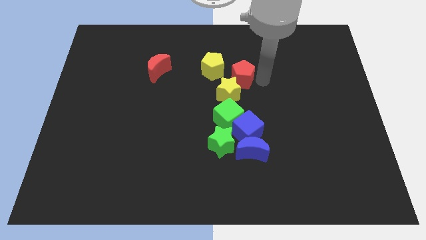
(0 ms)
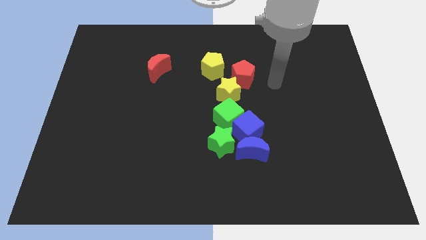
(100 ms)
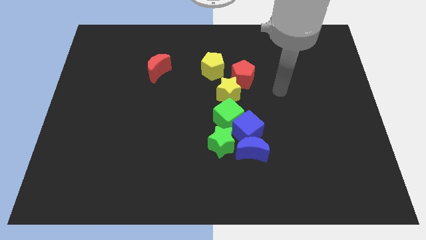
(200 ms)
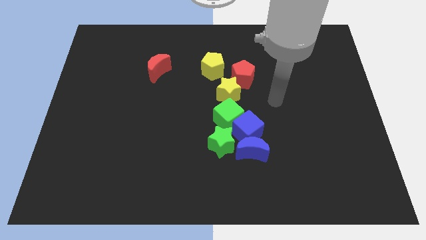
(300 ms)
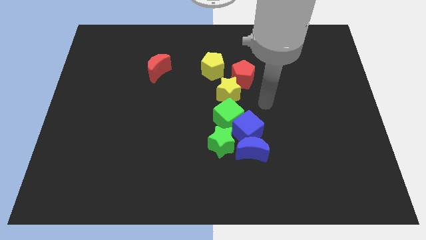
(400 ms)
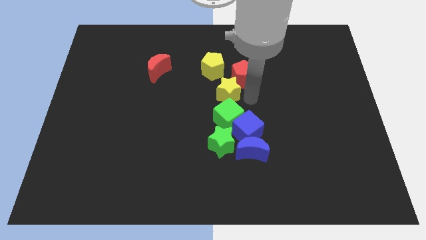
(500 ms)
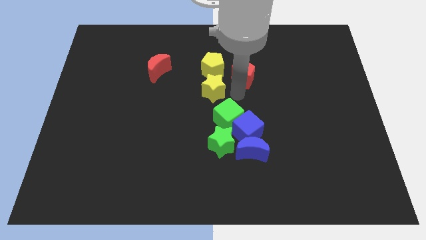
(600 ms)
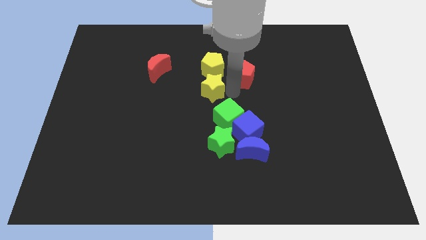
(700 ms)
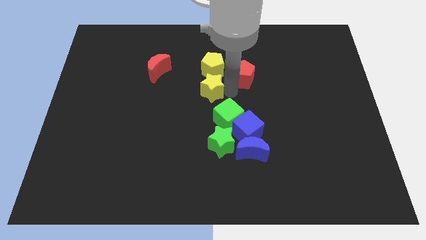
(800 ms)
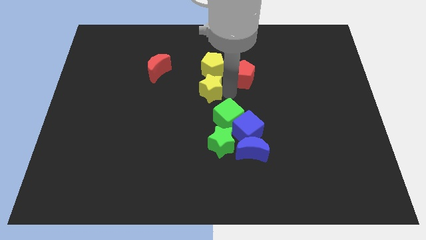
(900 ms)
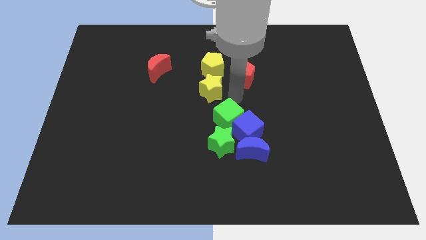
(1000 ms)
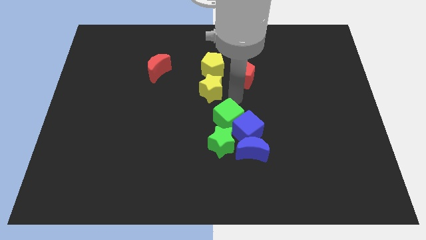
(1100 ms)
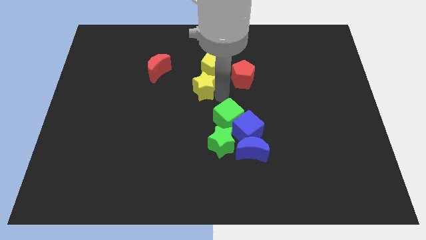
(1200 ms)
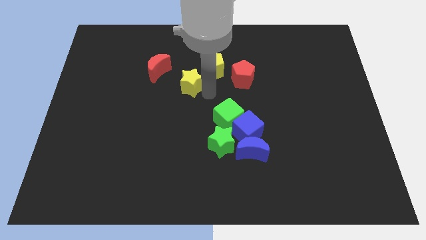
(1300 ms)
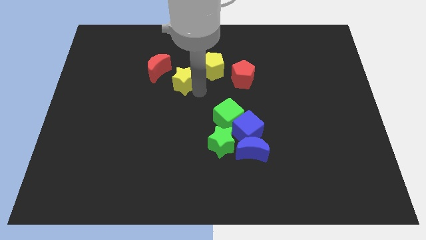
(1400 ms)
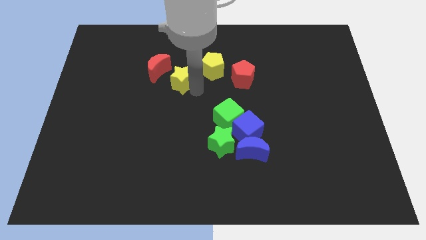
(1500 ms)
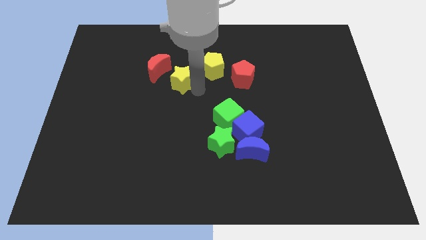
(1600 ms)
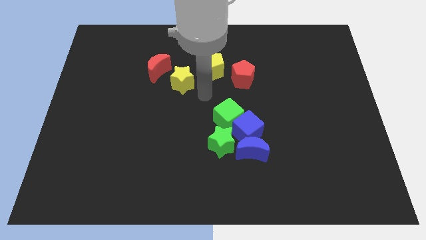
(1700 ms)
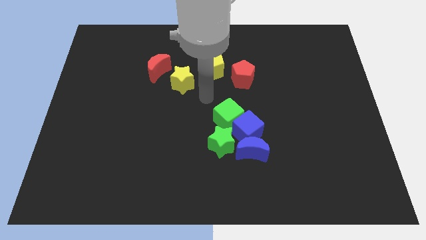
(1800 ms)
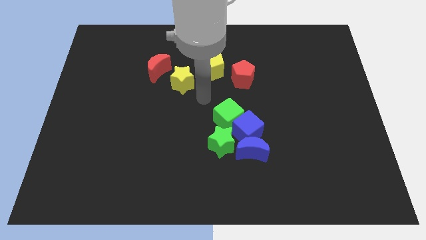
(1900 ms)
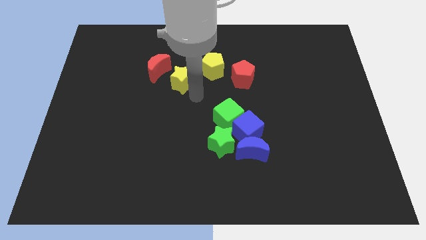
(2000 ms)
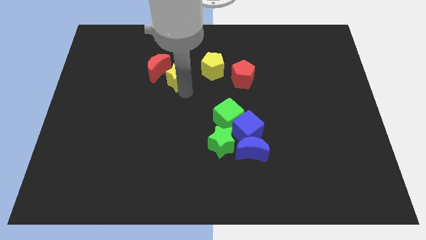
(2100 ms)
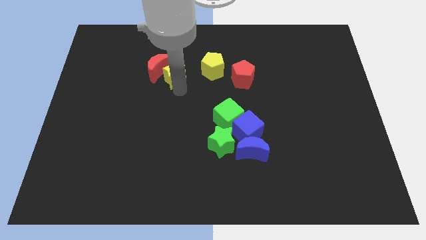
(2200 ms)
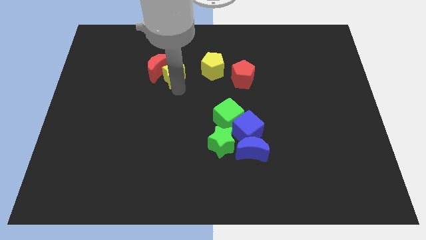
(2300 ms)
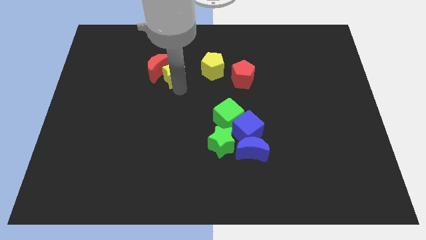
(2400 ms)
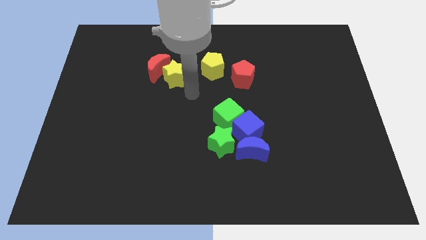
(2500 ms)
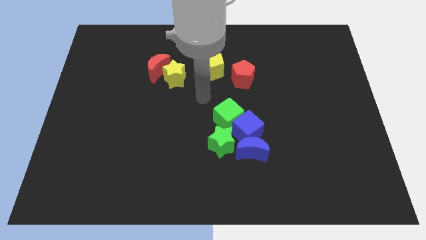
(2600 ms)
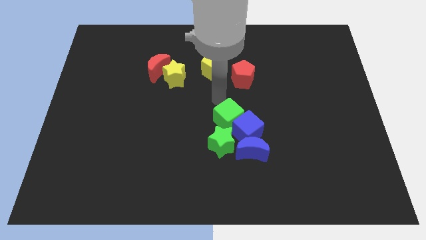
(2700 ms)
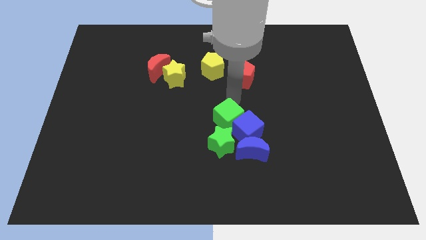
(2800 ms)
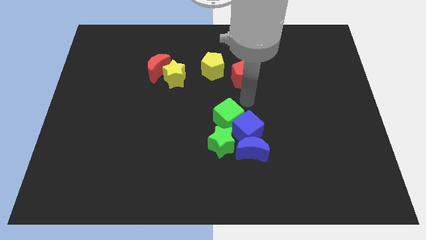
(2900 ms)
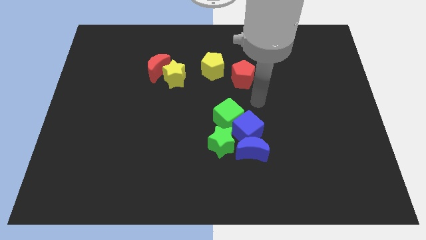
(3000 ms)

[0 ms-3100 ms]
place the yellow star to the right side of the red crescent

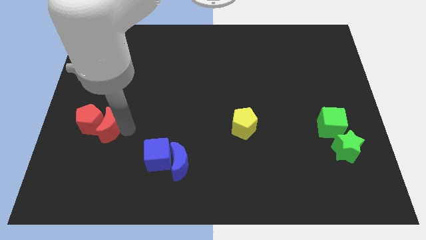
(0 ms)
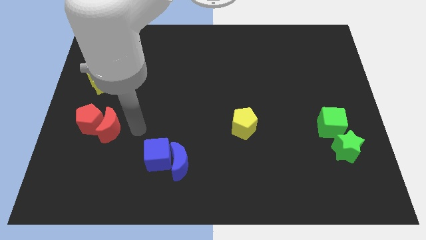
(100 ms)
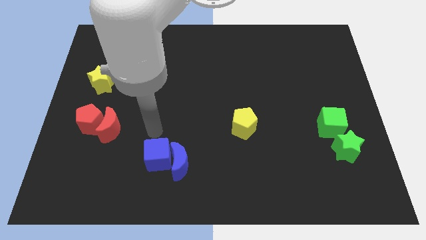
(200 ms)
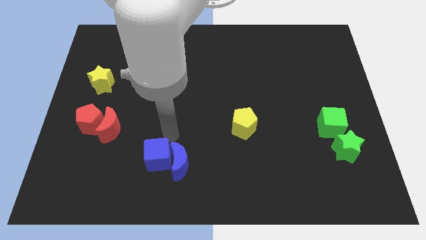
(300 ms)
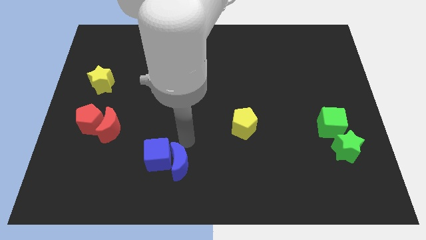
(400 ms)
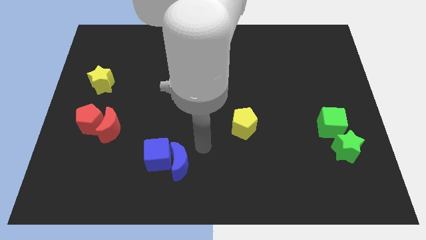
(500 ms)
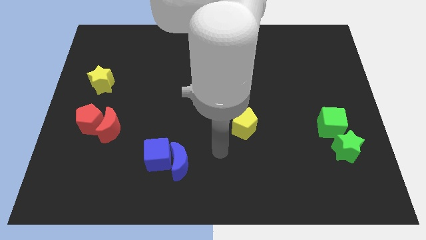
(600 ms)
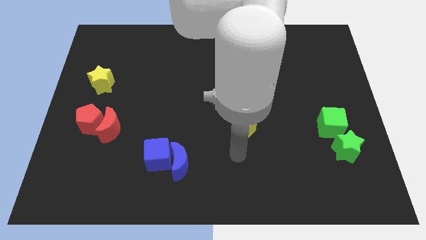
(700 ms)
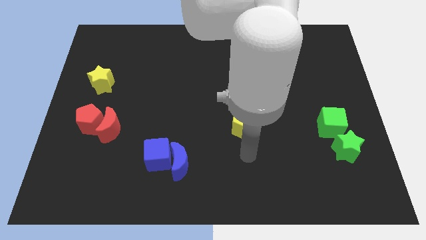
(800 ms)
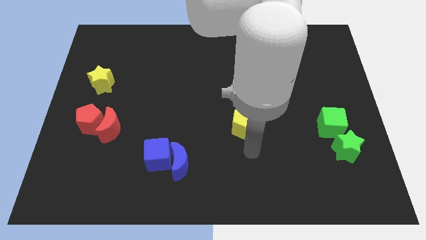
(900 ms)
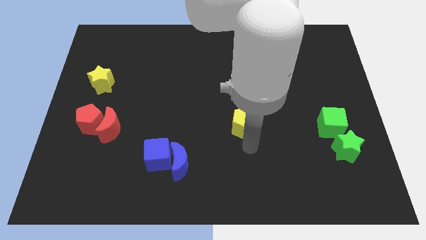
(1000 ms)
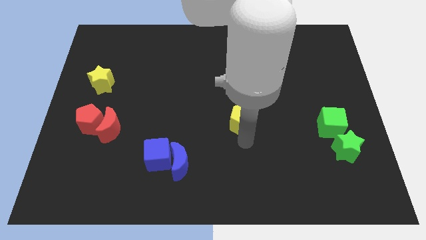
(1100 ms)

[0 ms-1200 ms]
move robot arm towards yellow pentagon

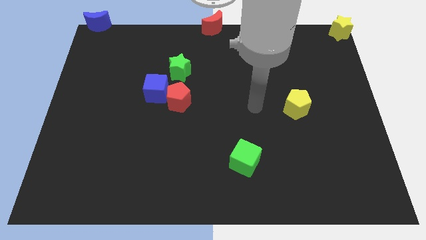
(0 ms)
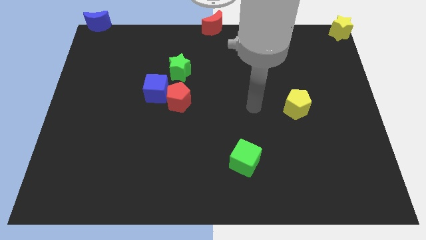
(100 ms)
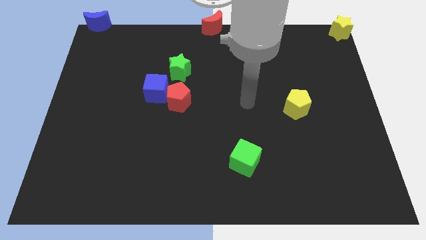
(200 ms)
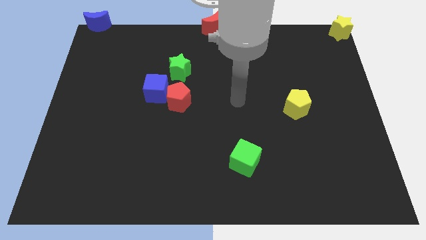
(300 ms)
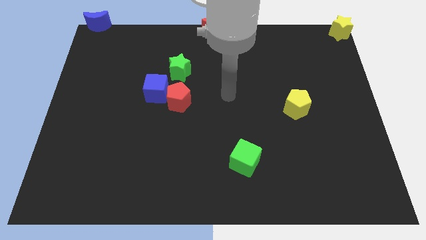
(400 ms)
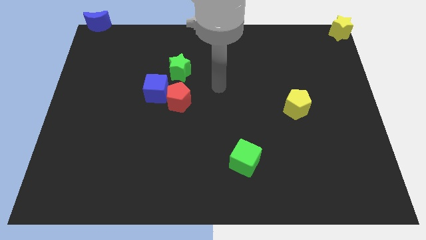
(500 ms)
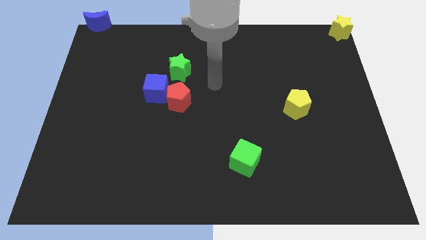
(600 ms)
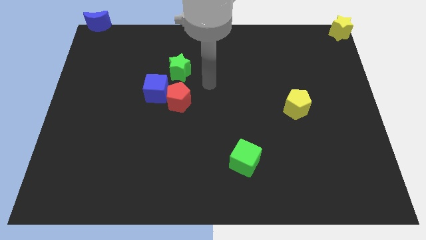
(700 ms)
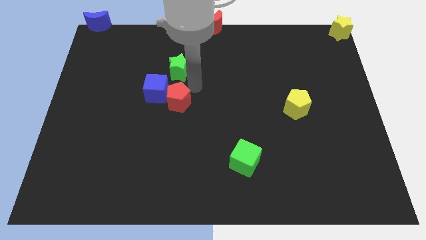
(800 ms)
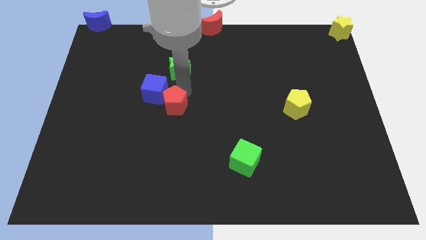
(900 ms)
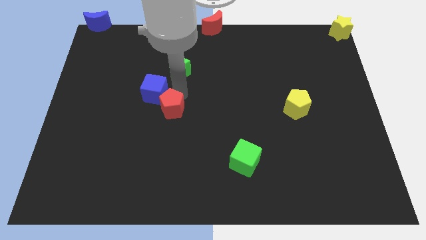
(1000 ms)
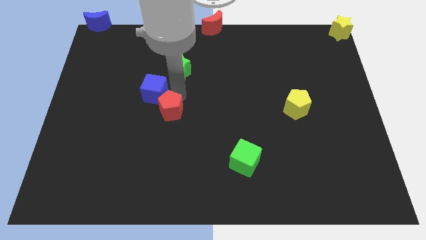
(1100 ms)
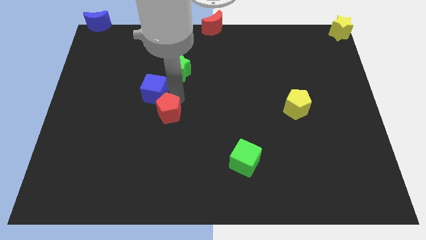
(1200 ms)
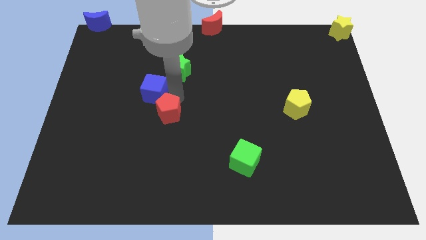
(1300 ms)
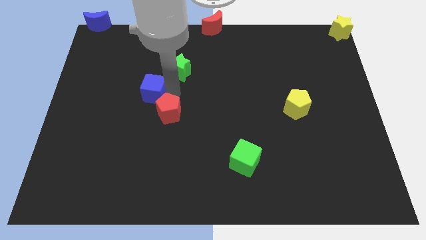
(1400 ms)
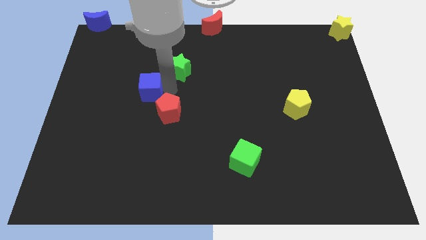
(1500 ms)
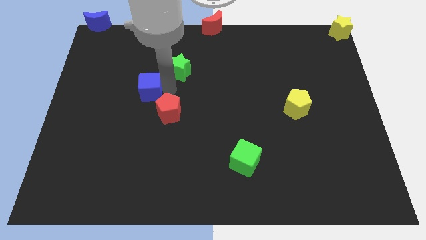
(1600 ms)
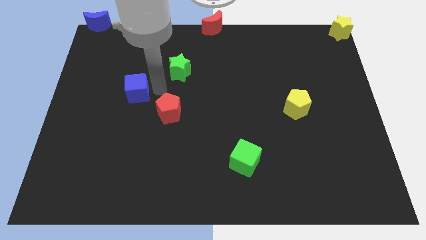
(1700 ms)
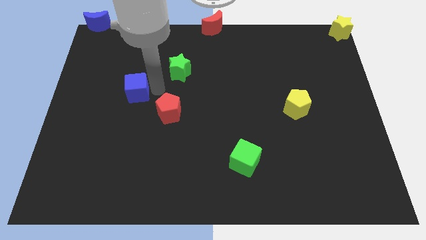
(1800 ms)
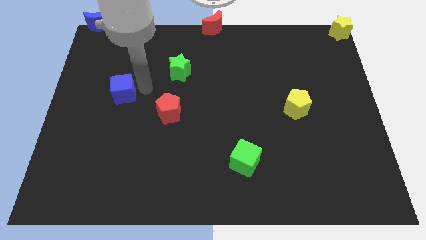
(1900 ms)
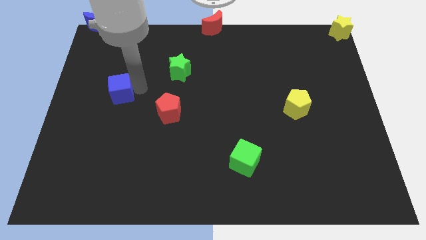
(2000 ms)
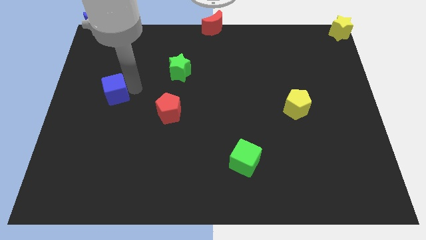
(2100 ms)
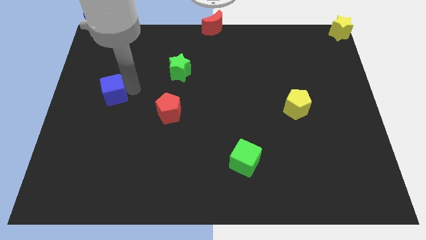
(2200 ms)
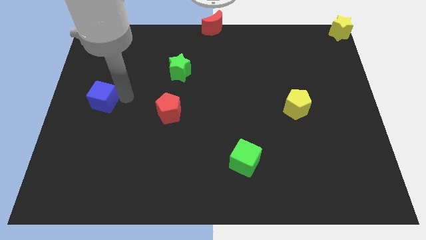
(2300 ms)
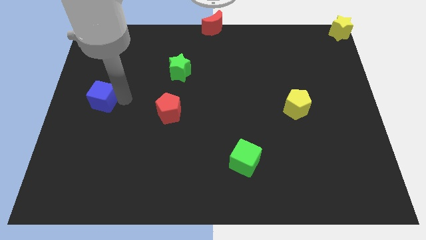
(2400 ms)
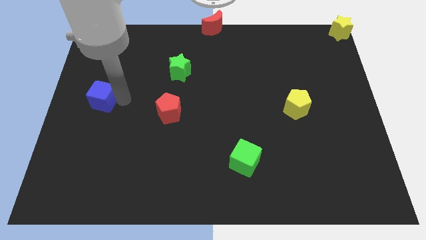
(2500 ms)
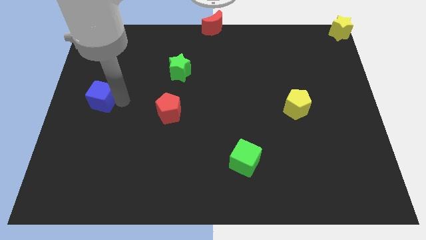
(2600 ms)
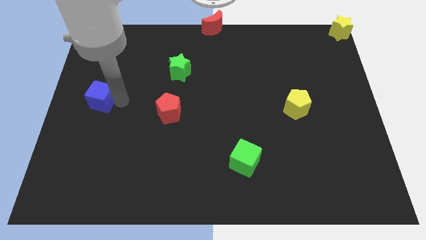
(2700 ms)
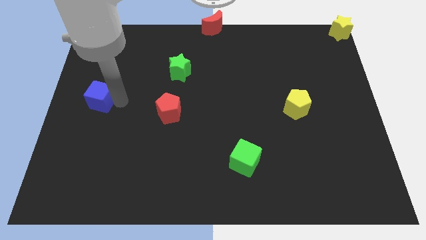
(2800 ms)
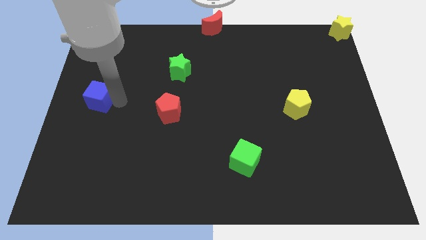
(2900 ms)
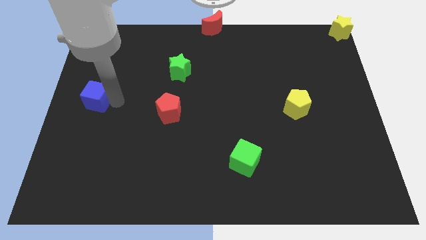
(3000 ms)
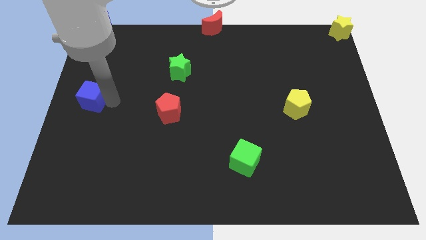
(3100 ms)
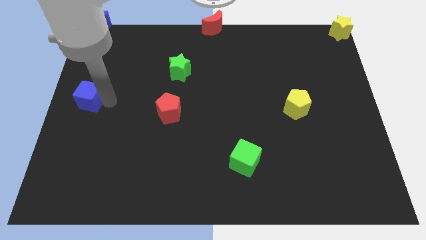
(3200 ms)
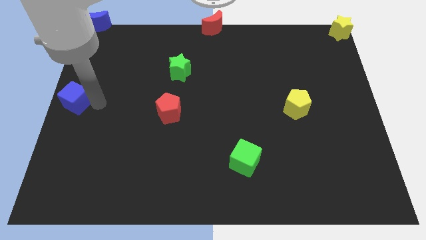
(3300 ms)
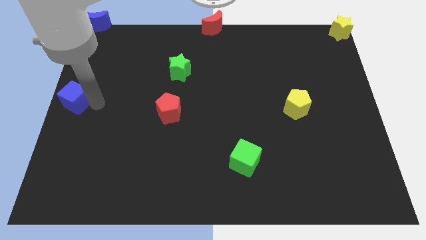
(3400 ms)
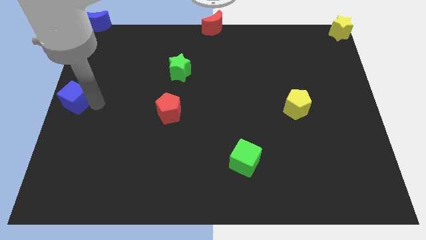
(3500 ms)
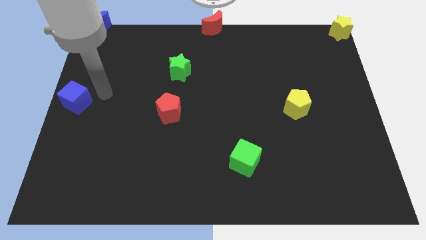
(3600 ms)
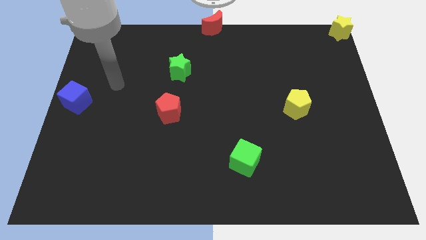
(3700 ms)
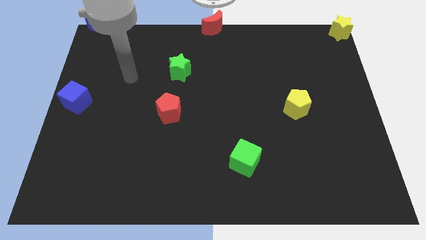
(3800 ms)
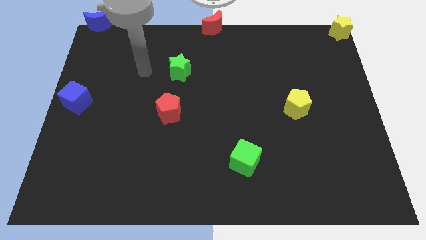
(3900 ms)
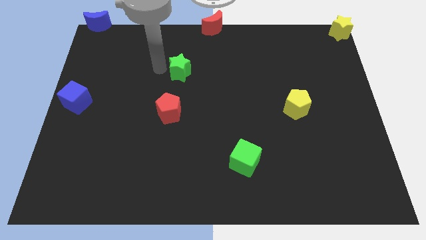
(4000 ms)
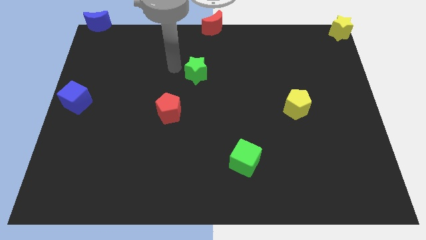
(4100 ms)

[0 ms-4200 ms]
move the blue cube to the left center of the board

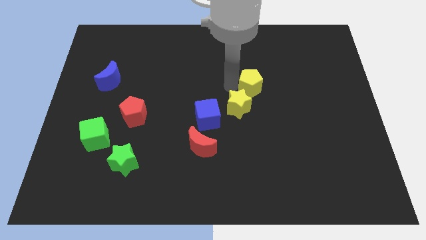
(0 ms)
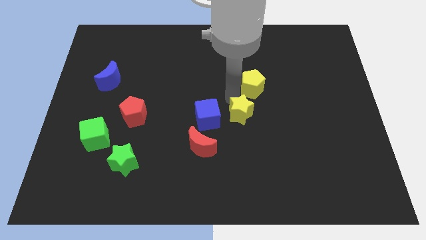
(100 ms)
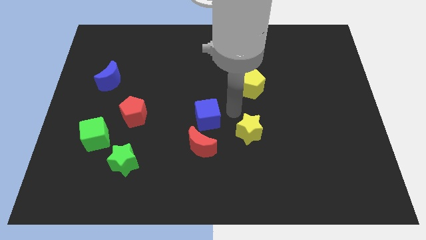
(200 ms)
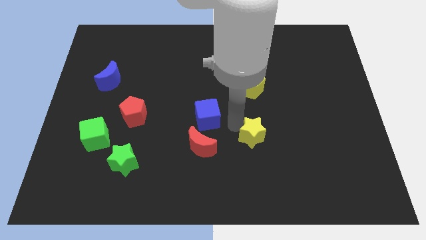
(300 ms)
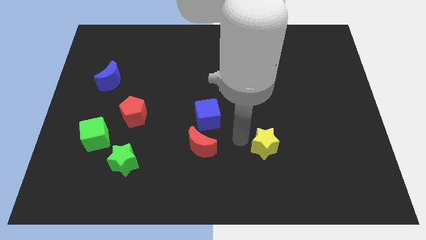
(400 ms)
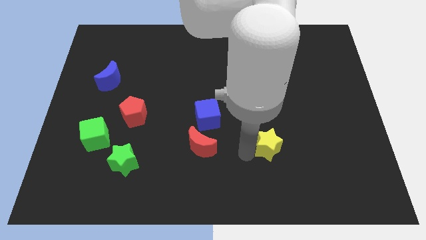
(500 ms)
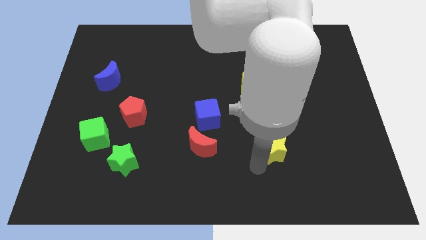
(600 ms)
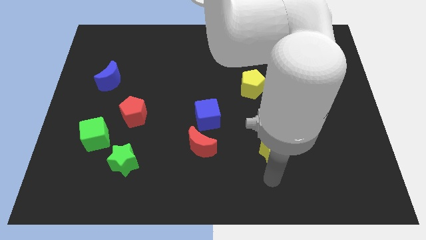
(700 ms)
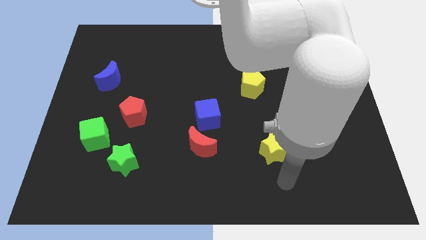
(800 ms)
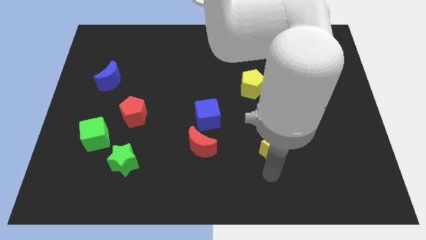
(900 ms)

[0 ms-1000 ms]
drag the yellow star slightly towards the bottom
